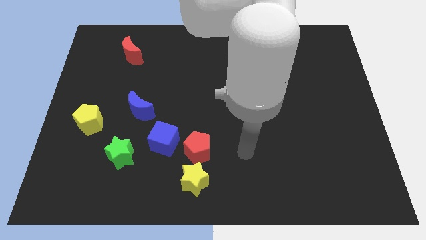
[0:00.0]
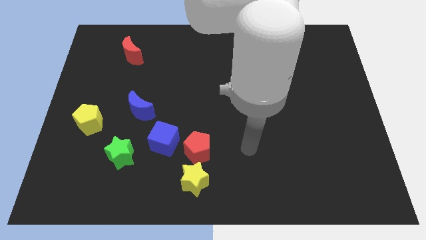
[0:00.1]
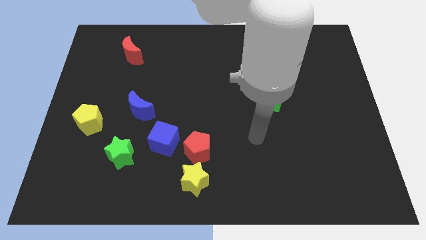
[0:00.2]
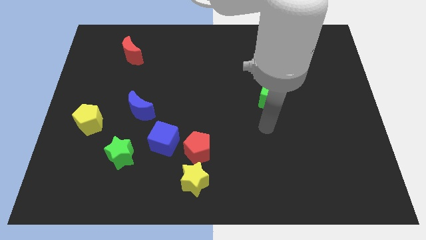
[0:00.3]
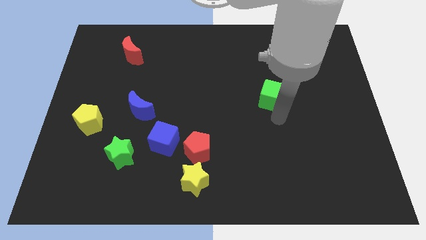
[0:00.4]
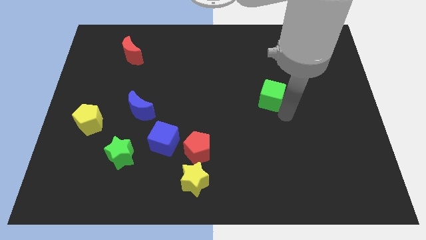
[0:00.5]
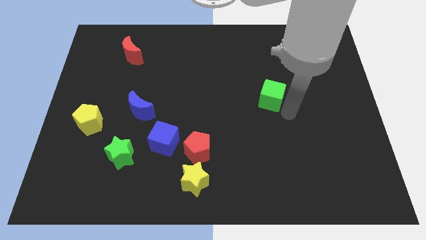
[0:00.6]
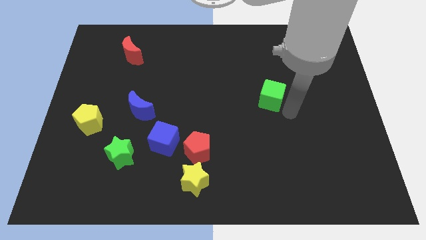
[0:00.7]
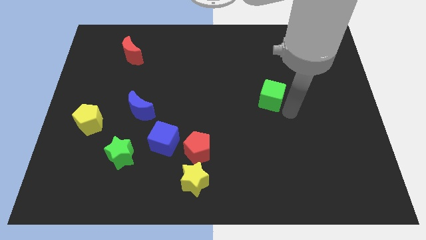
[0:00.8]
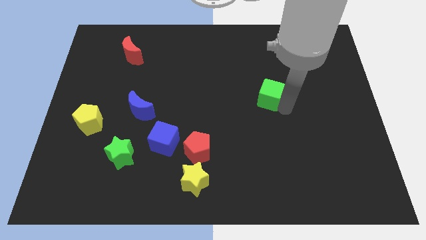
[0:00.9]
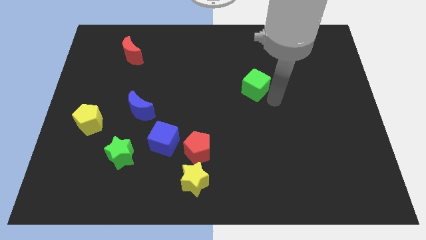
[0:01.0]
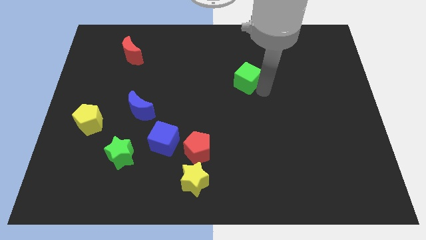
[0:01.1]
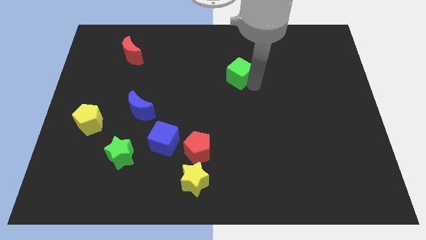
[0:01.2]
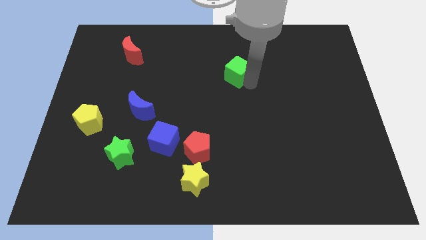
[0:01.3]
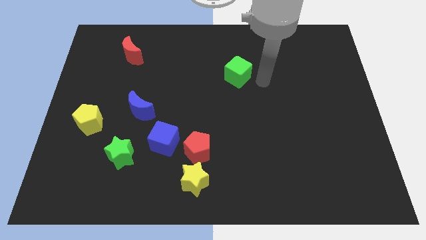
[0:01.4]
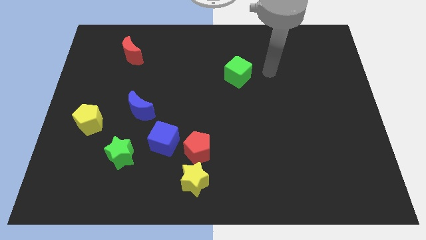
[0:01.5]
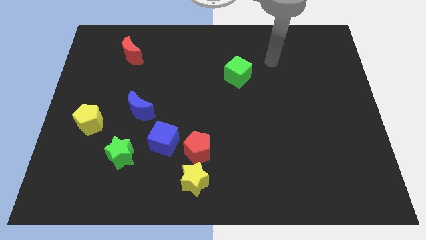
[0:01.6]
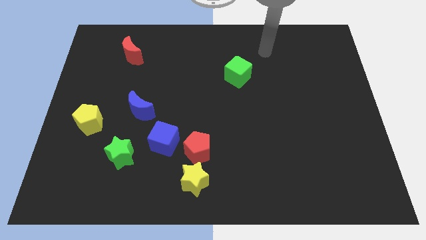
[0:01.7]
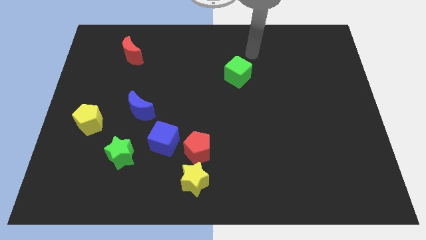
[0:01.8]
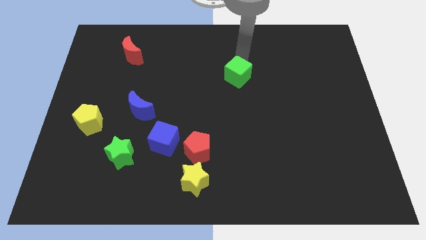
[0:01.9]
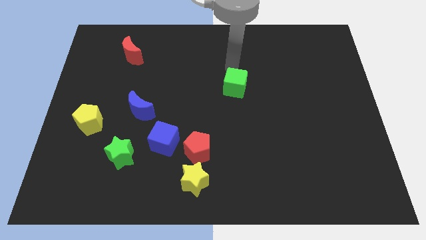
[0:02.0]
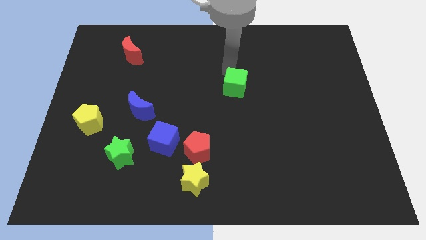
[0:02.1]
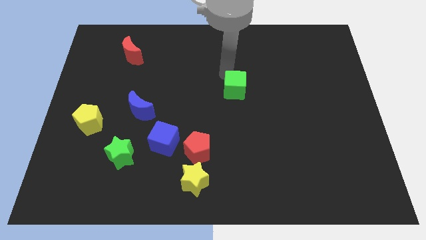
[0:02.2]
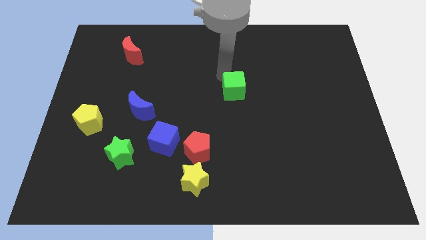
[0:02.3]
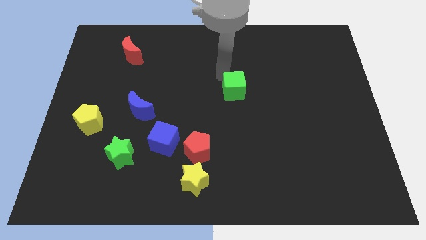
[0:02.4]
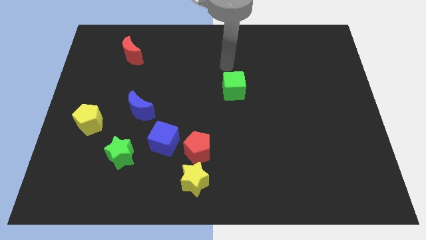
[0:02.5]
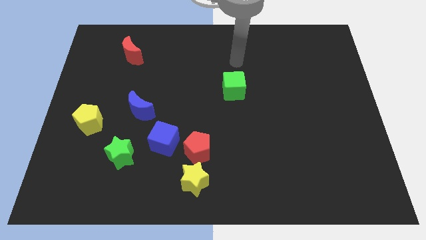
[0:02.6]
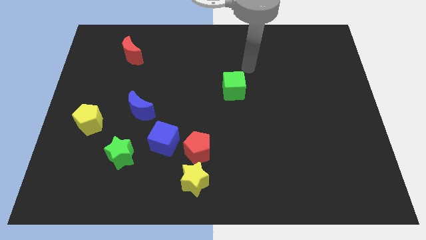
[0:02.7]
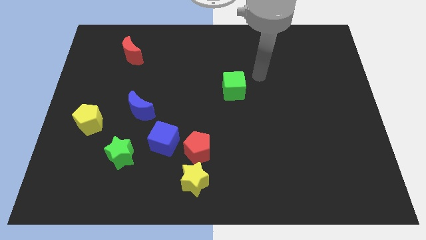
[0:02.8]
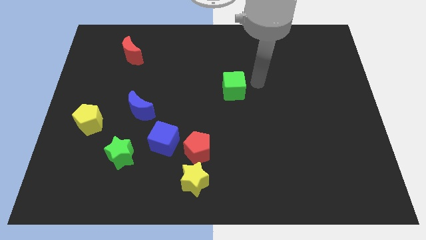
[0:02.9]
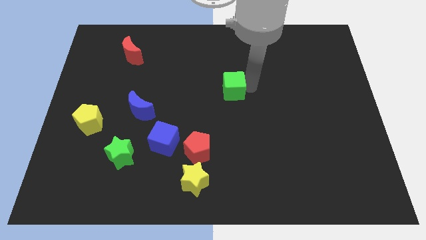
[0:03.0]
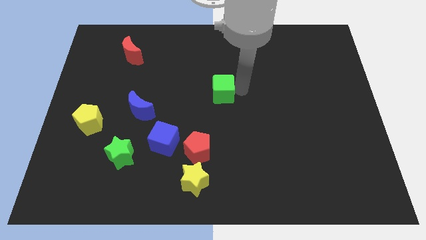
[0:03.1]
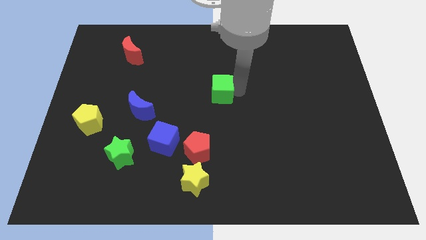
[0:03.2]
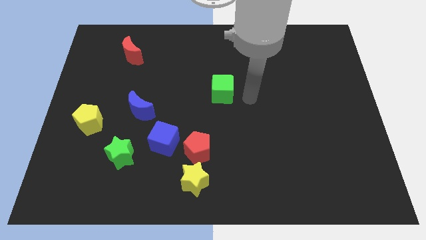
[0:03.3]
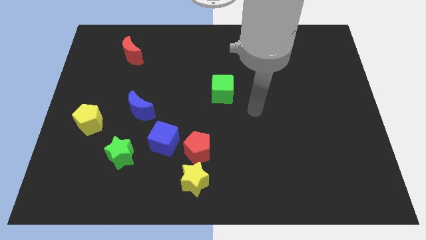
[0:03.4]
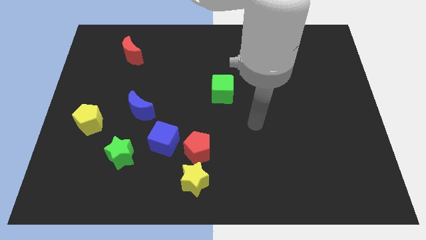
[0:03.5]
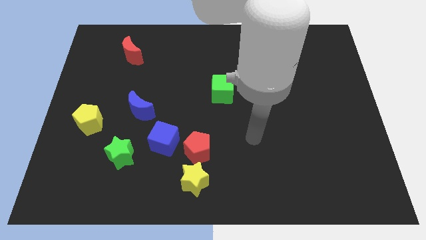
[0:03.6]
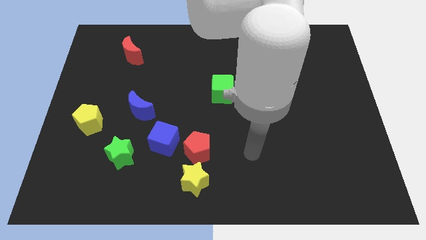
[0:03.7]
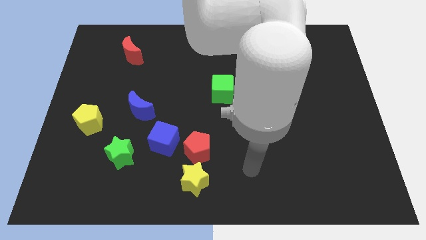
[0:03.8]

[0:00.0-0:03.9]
move the green cube to the centre of the board

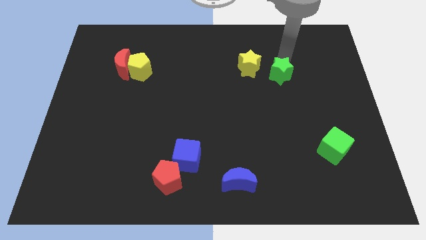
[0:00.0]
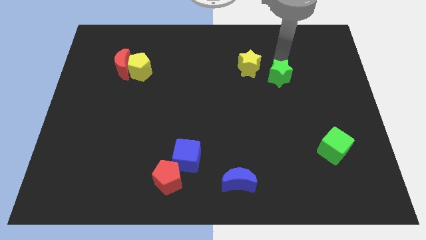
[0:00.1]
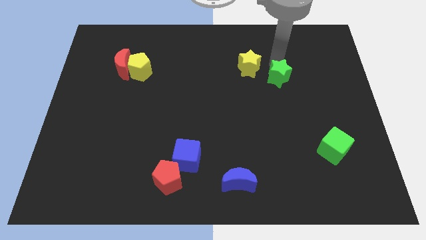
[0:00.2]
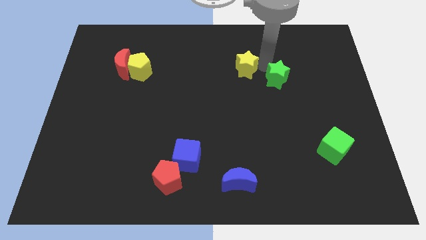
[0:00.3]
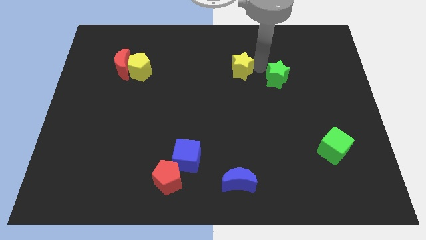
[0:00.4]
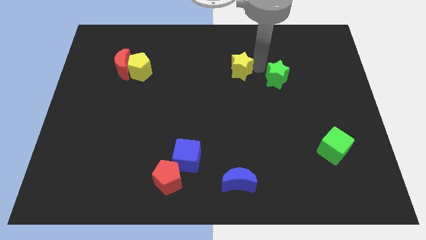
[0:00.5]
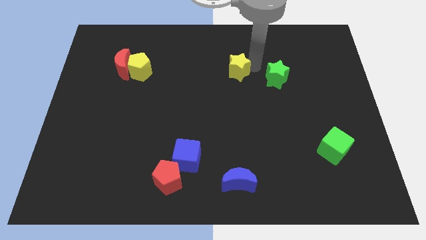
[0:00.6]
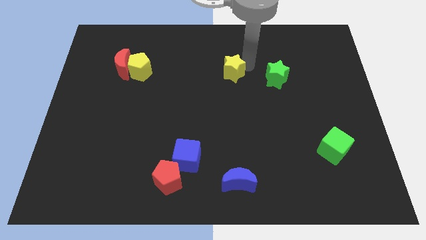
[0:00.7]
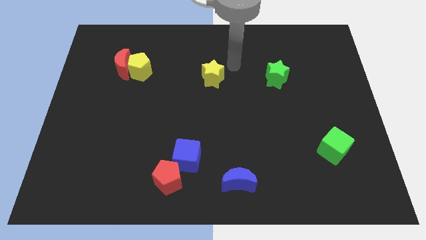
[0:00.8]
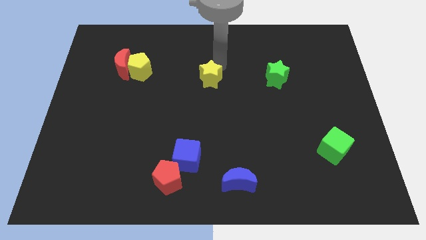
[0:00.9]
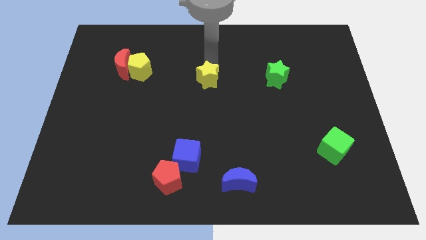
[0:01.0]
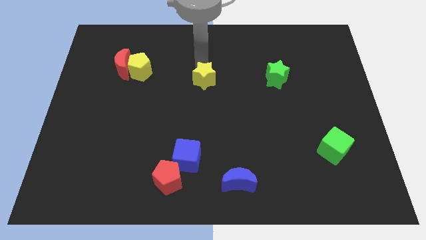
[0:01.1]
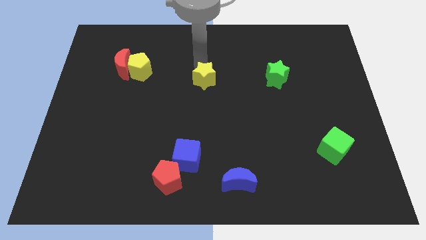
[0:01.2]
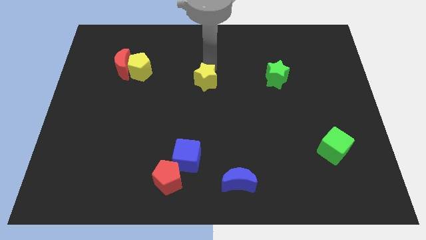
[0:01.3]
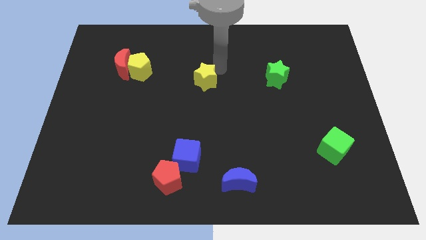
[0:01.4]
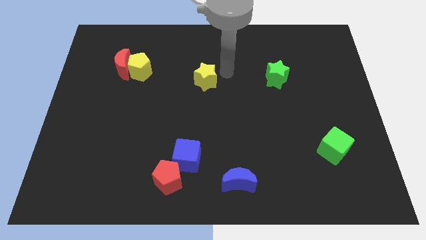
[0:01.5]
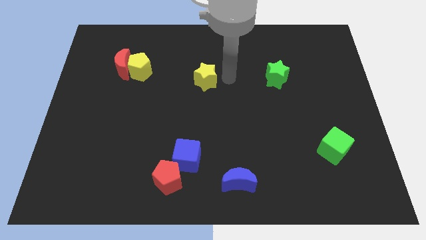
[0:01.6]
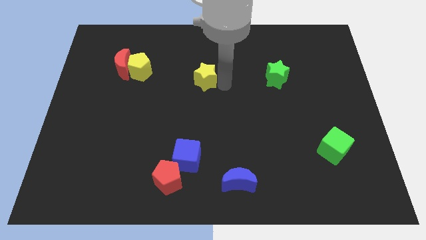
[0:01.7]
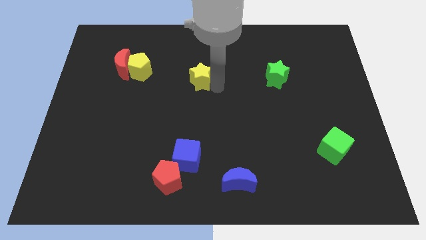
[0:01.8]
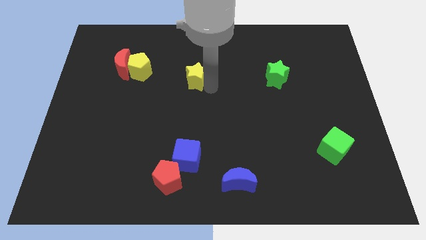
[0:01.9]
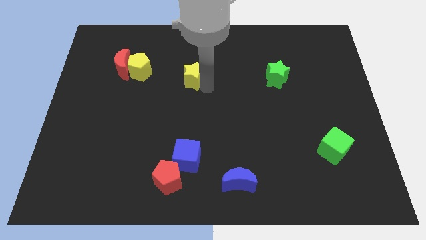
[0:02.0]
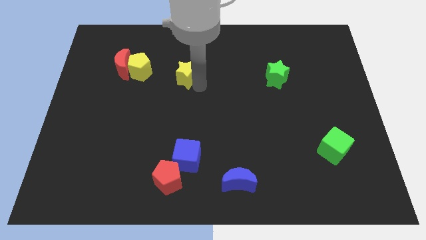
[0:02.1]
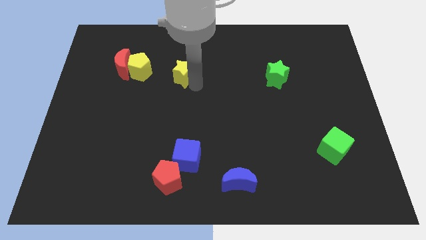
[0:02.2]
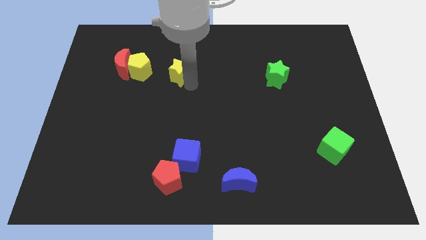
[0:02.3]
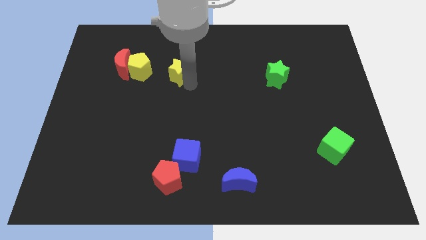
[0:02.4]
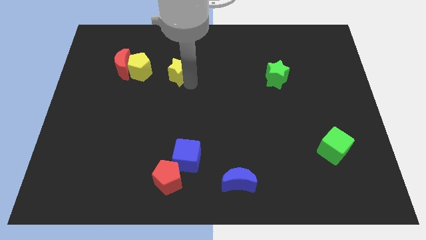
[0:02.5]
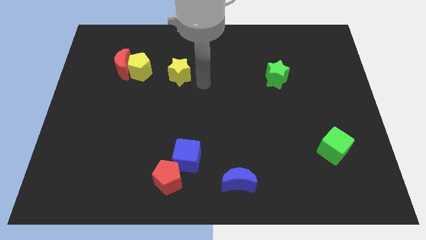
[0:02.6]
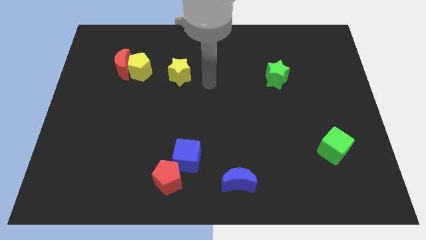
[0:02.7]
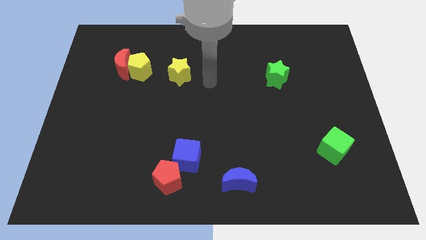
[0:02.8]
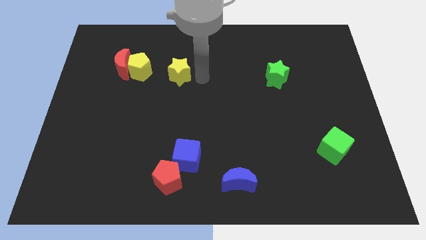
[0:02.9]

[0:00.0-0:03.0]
drag the yellow star to the left

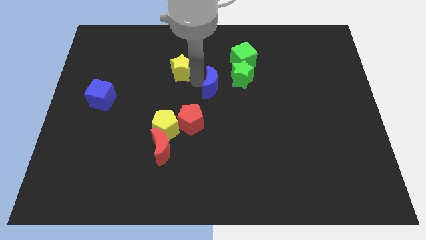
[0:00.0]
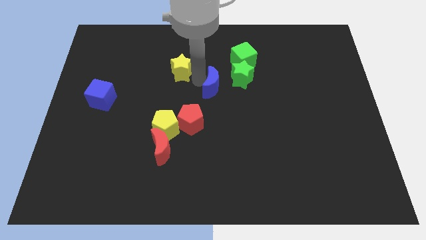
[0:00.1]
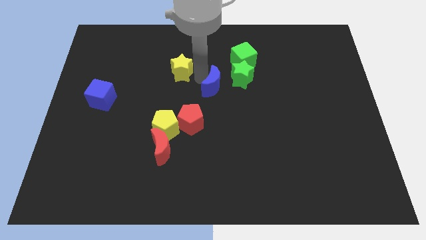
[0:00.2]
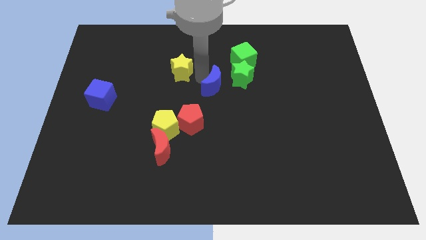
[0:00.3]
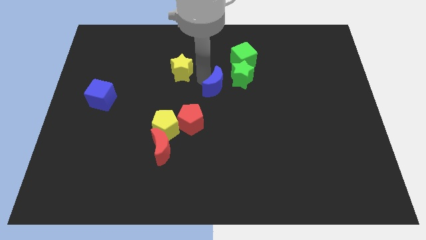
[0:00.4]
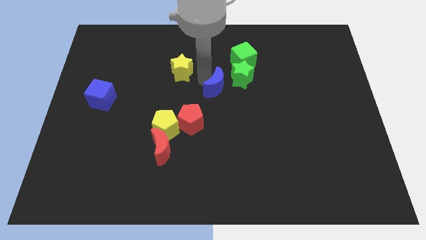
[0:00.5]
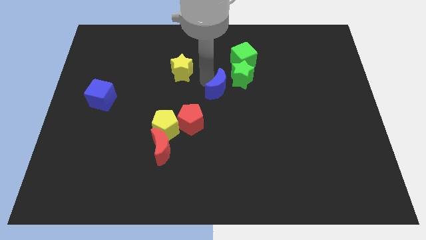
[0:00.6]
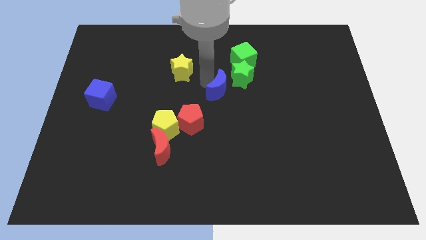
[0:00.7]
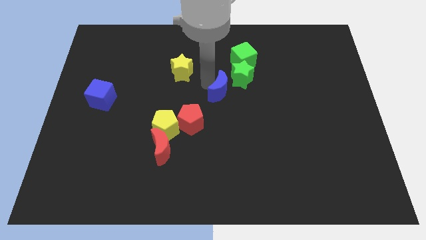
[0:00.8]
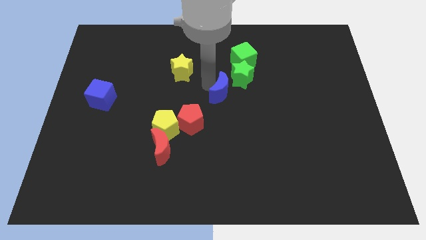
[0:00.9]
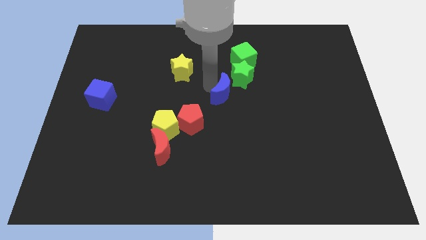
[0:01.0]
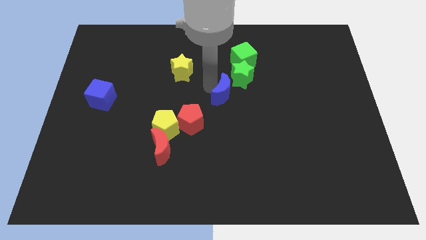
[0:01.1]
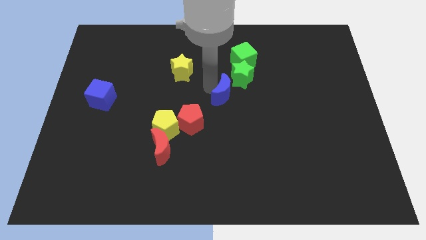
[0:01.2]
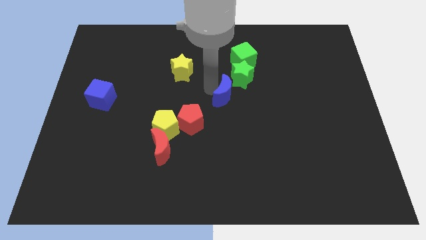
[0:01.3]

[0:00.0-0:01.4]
slide the blue moon slightly to the right

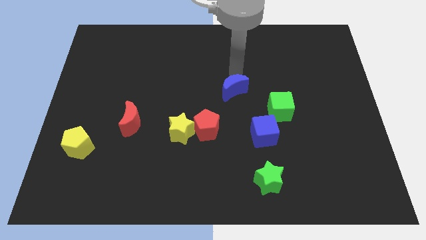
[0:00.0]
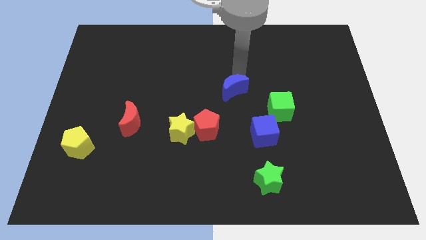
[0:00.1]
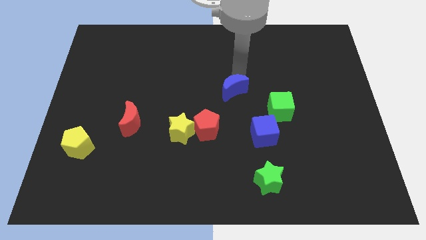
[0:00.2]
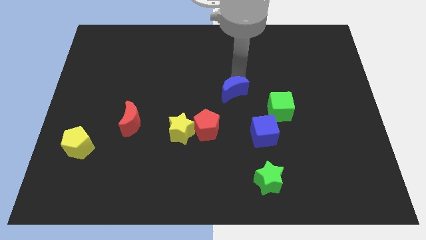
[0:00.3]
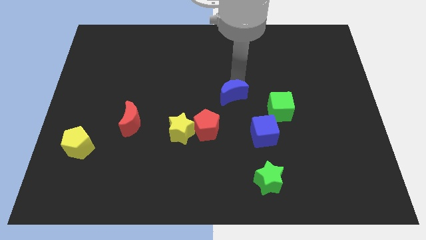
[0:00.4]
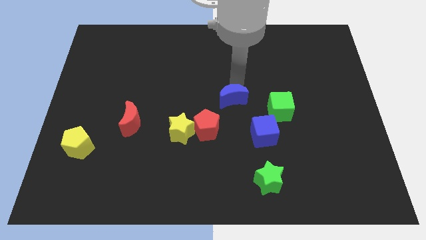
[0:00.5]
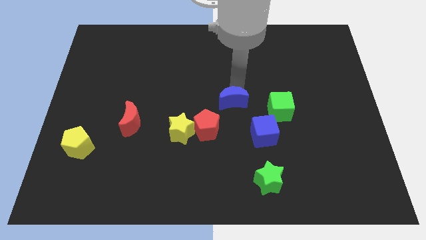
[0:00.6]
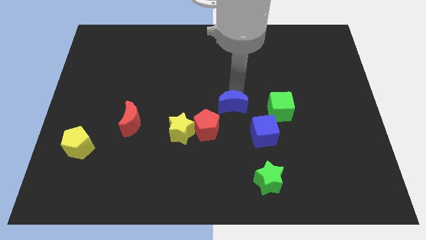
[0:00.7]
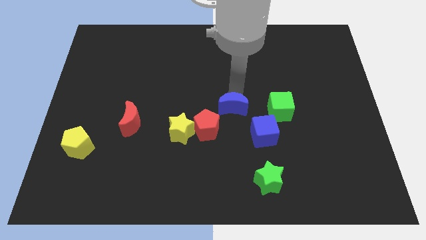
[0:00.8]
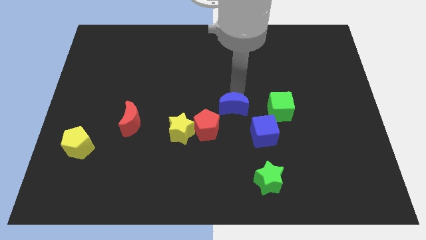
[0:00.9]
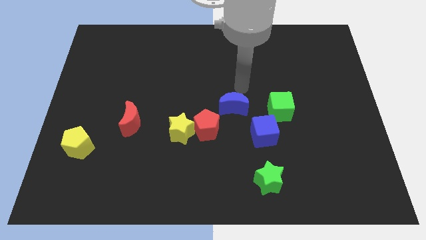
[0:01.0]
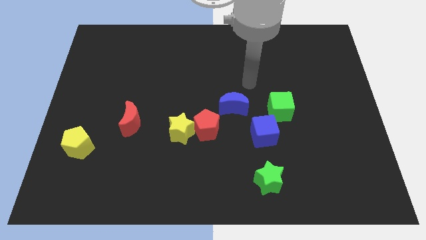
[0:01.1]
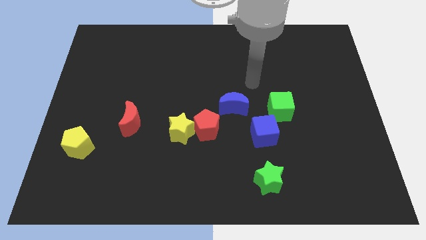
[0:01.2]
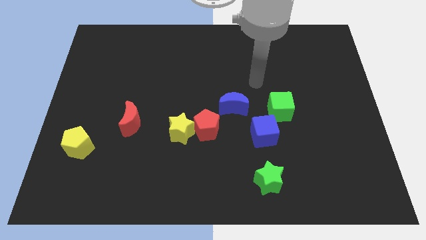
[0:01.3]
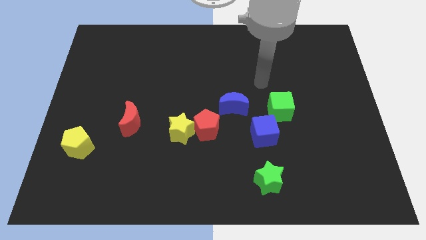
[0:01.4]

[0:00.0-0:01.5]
place the blue moon to the left of the green cube
